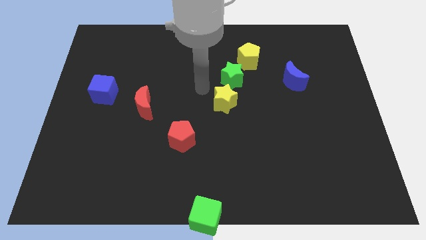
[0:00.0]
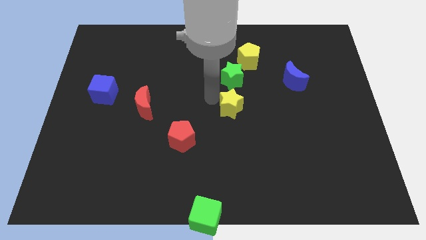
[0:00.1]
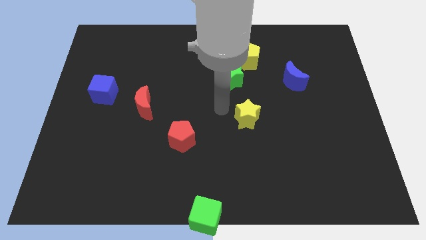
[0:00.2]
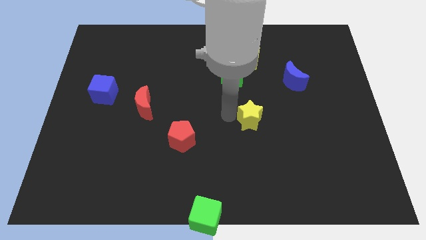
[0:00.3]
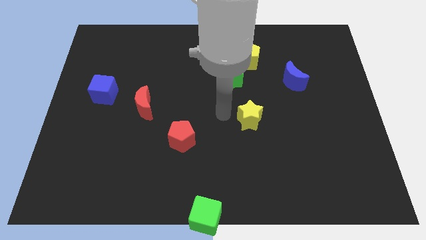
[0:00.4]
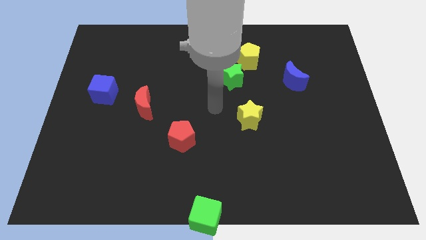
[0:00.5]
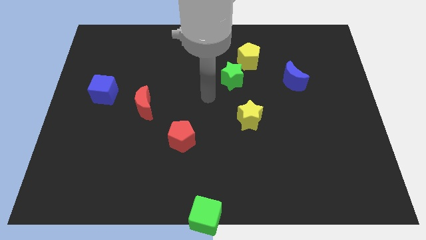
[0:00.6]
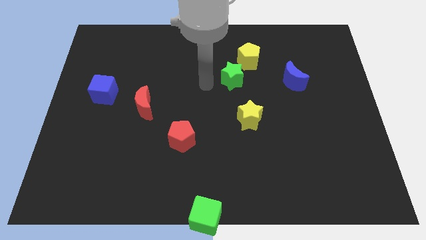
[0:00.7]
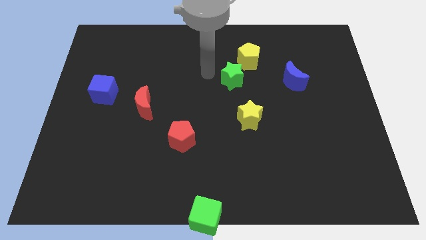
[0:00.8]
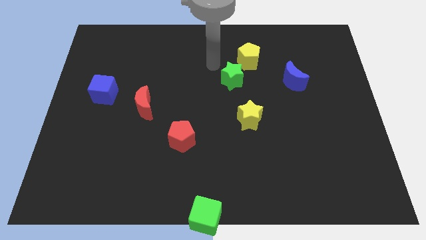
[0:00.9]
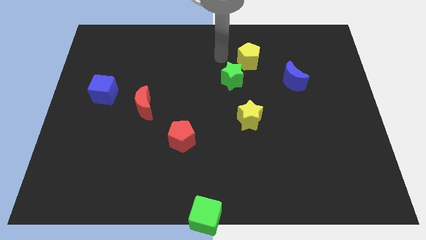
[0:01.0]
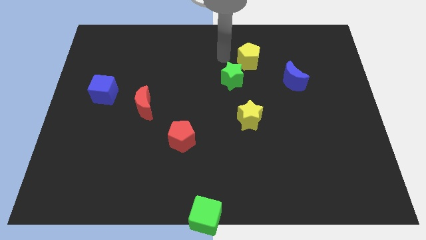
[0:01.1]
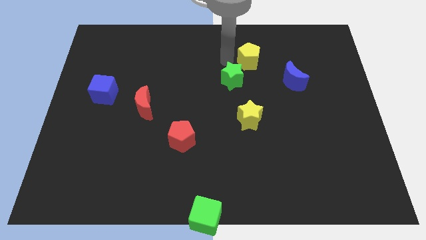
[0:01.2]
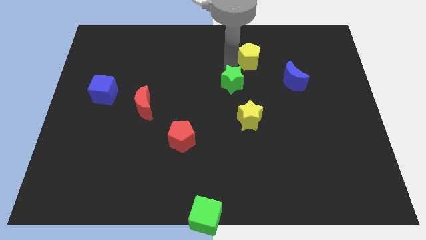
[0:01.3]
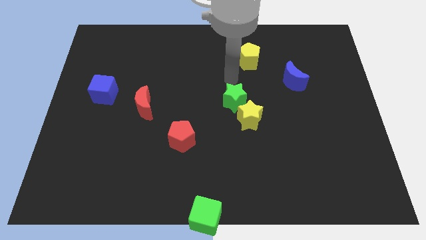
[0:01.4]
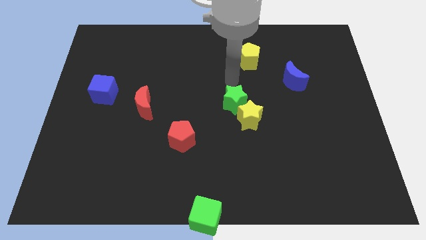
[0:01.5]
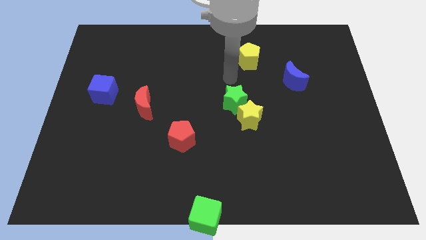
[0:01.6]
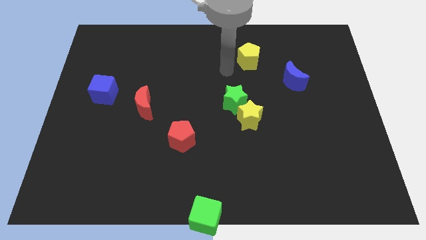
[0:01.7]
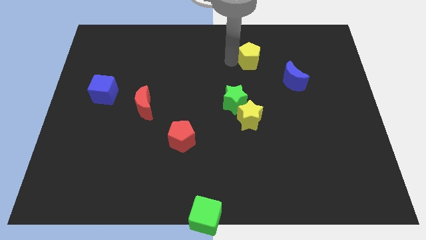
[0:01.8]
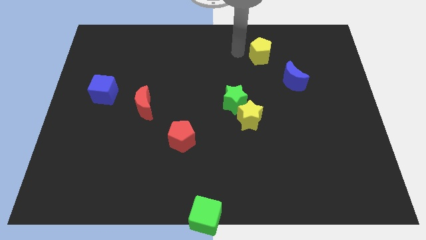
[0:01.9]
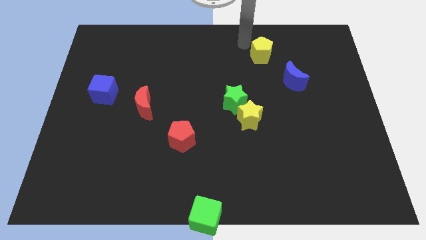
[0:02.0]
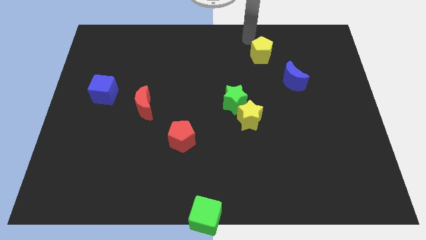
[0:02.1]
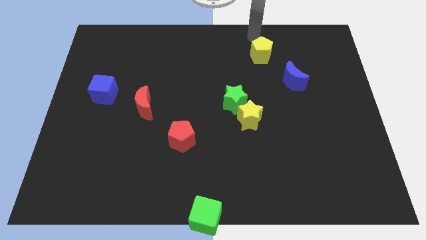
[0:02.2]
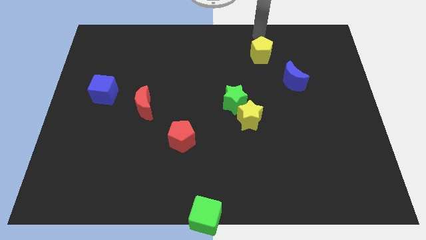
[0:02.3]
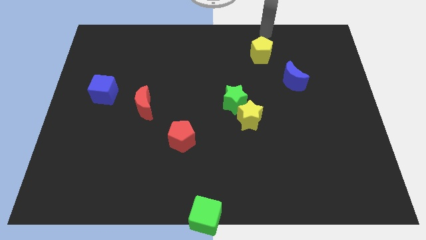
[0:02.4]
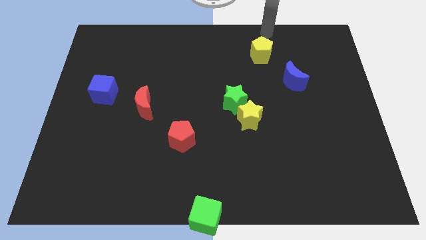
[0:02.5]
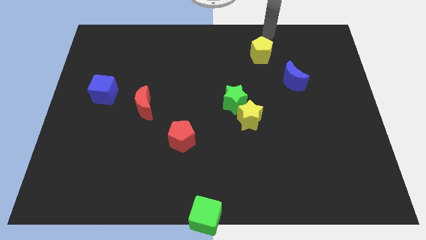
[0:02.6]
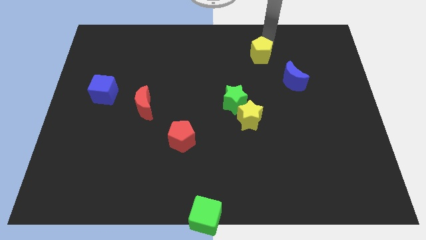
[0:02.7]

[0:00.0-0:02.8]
move the yellow star and green star to the center

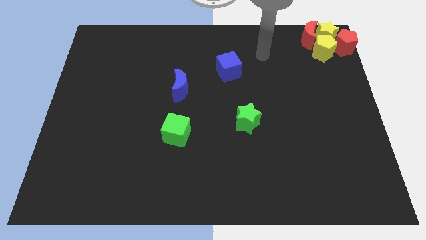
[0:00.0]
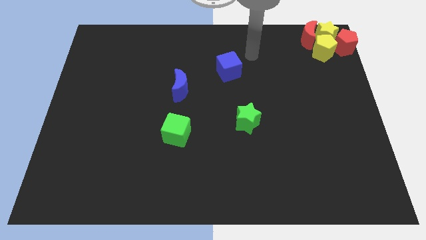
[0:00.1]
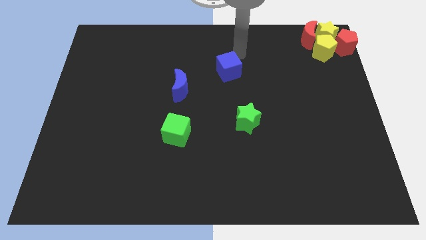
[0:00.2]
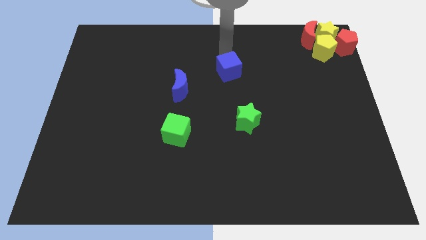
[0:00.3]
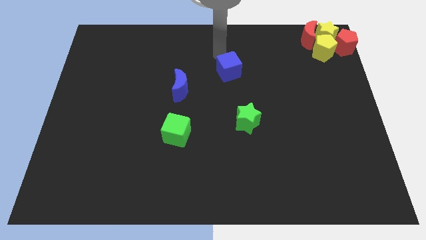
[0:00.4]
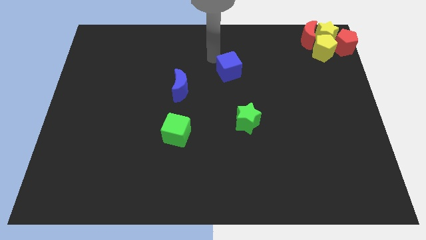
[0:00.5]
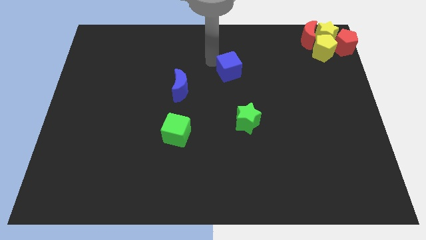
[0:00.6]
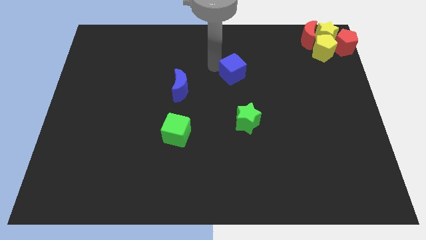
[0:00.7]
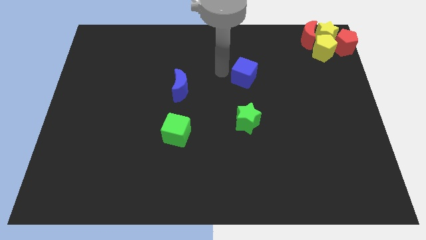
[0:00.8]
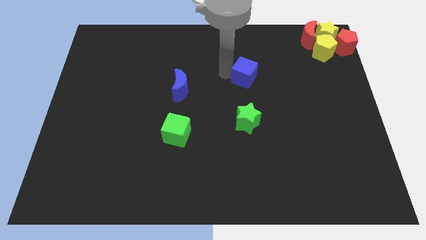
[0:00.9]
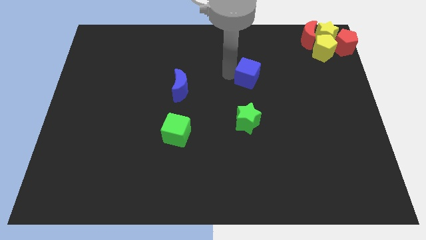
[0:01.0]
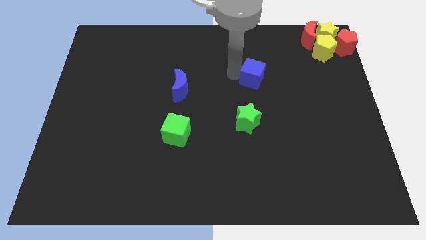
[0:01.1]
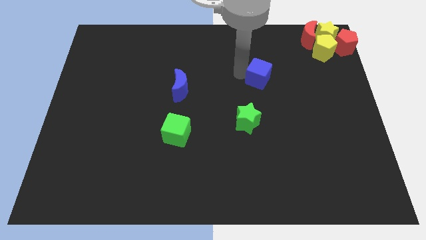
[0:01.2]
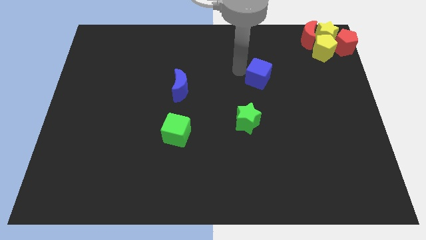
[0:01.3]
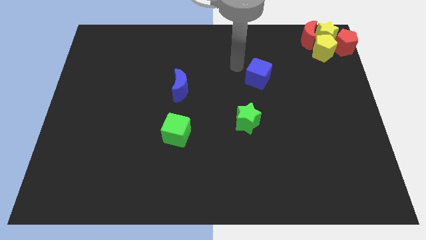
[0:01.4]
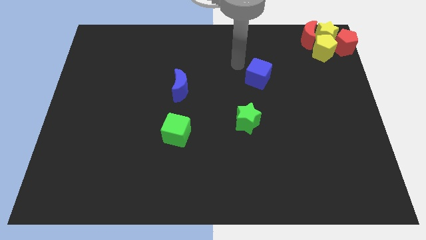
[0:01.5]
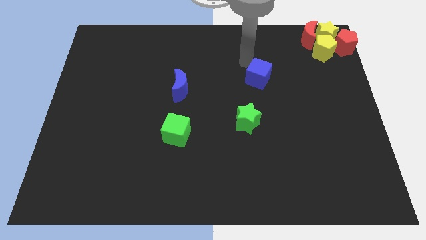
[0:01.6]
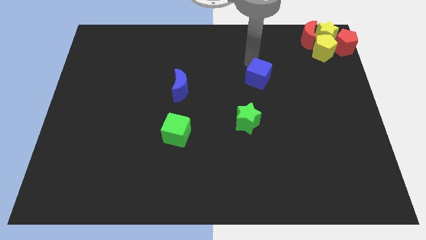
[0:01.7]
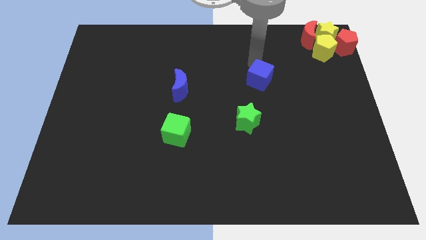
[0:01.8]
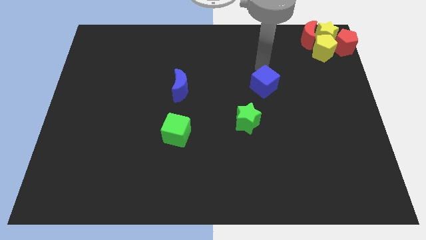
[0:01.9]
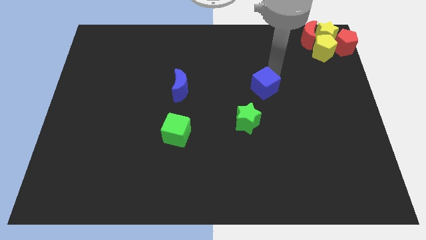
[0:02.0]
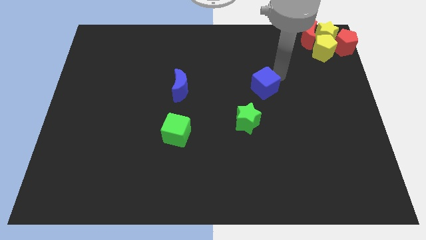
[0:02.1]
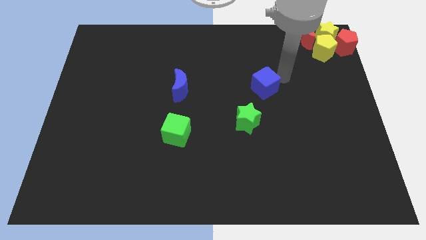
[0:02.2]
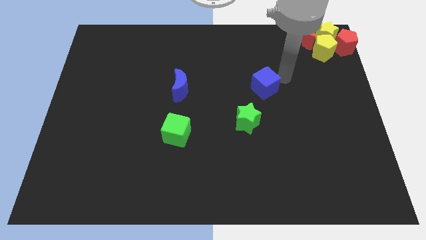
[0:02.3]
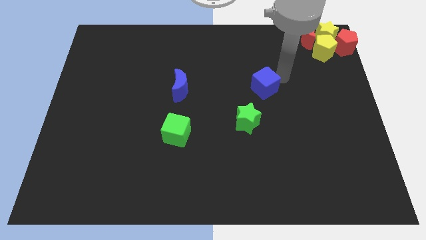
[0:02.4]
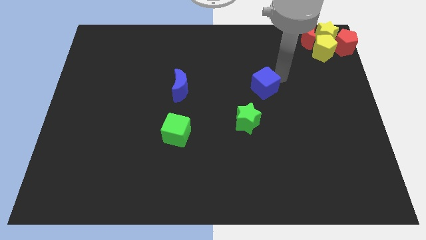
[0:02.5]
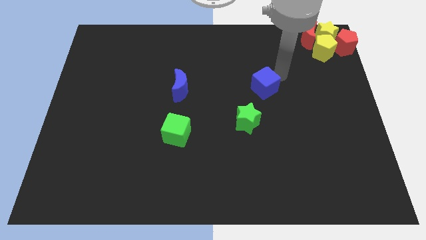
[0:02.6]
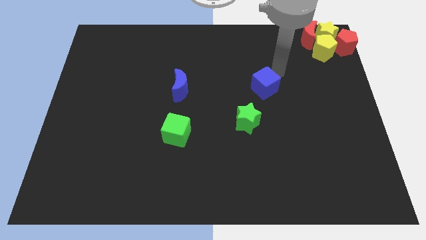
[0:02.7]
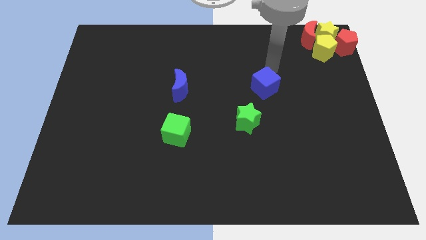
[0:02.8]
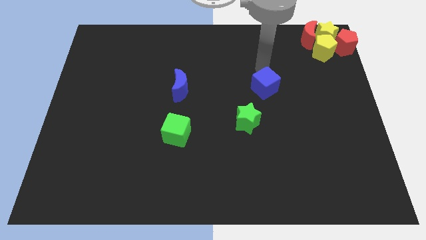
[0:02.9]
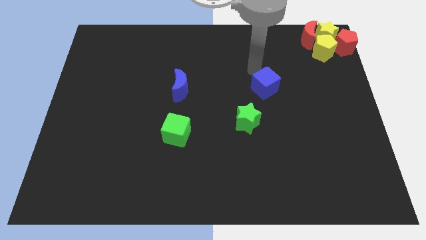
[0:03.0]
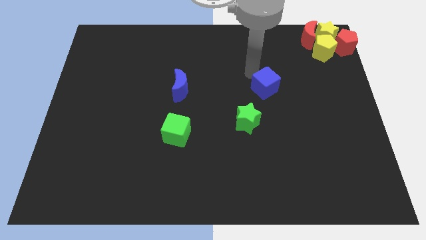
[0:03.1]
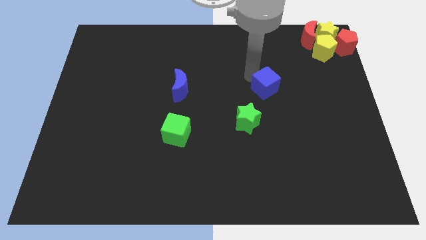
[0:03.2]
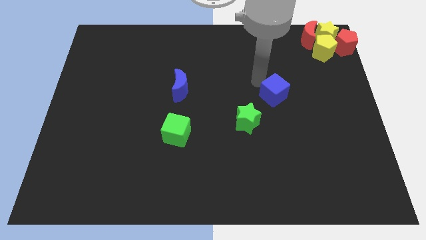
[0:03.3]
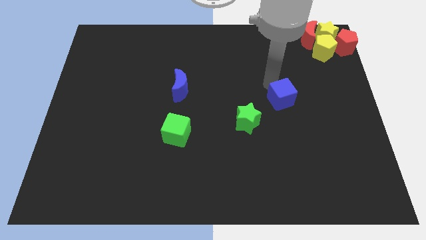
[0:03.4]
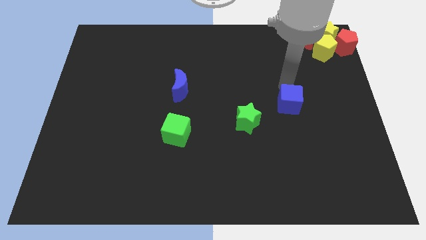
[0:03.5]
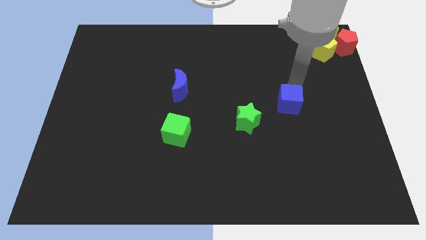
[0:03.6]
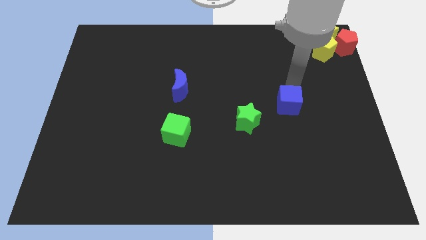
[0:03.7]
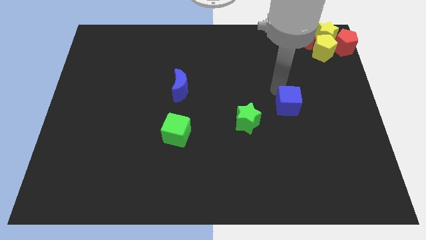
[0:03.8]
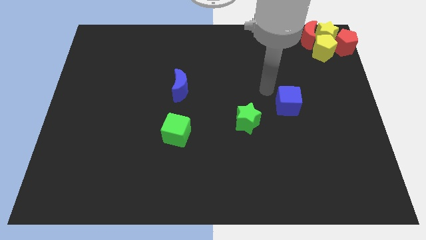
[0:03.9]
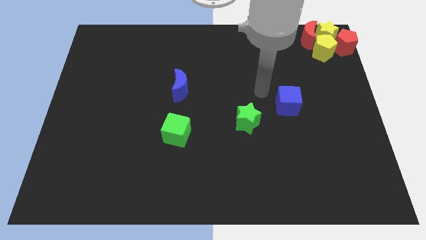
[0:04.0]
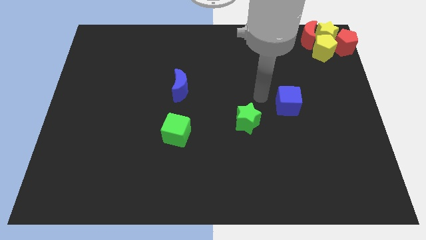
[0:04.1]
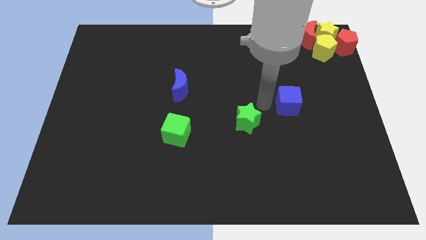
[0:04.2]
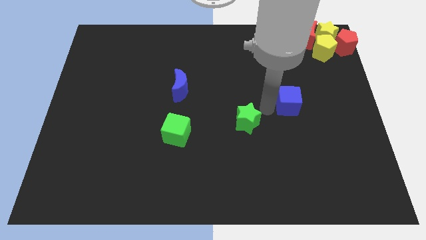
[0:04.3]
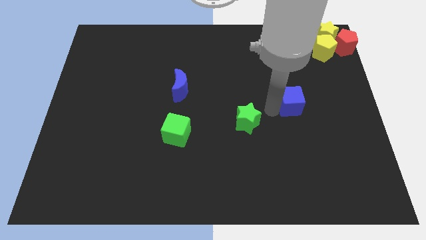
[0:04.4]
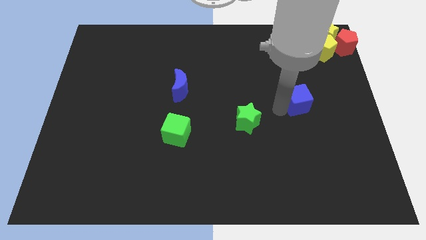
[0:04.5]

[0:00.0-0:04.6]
move the blue cube to the top right side of the green star

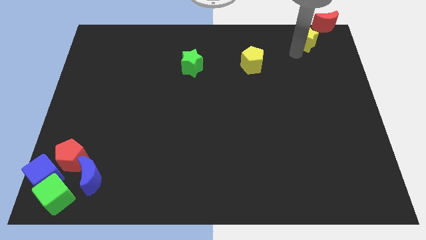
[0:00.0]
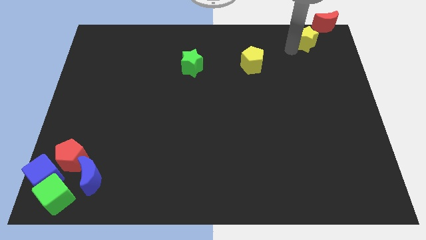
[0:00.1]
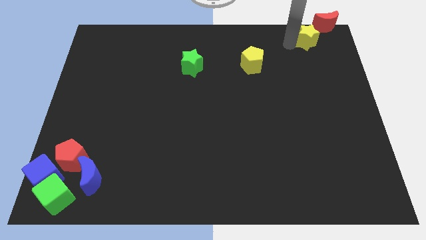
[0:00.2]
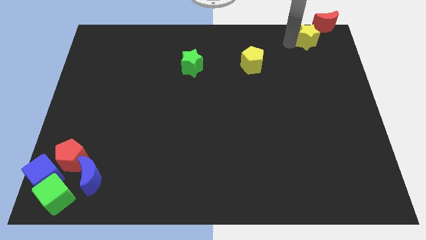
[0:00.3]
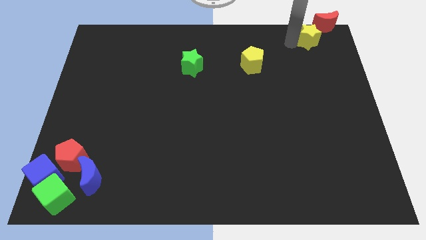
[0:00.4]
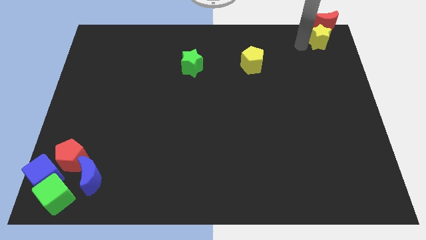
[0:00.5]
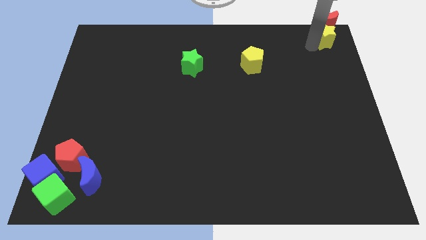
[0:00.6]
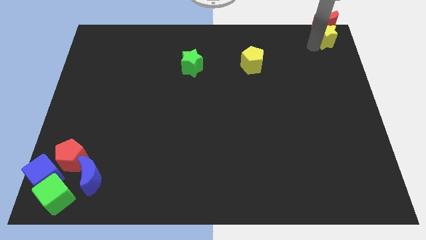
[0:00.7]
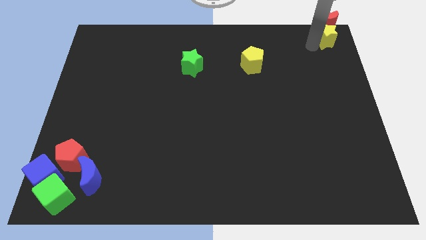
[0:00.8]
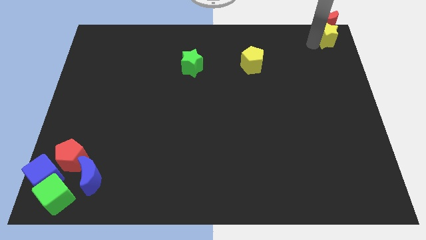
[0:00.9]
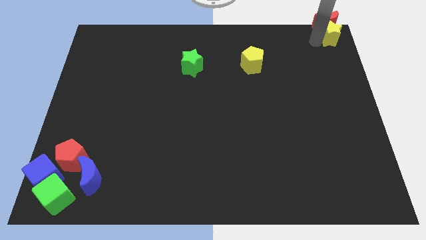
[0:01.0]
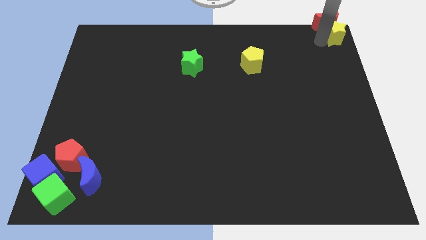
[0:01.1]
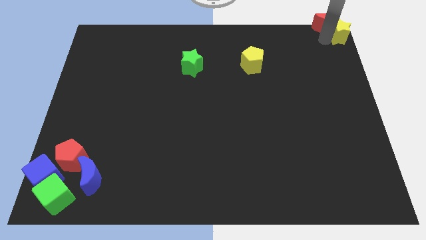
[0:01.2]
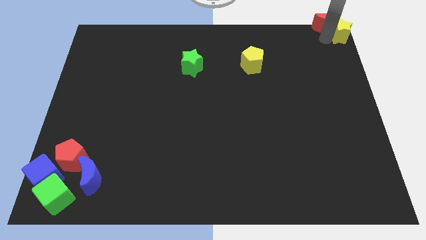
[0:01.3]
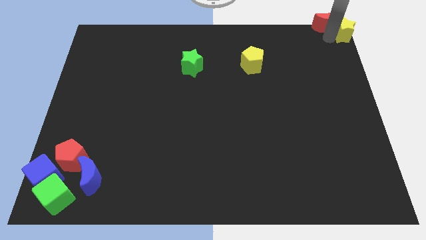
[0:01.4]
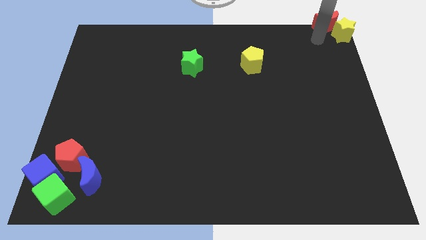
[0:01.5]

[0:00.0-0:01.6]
push the yellow star to the top right corner of the board
